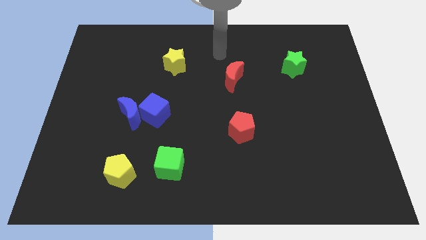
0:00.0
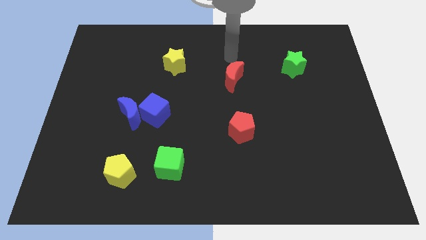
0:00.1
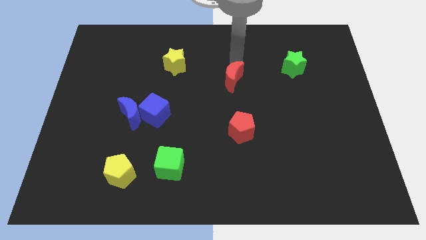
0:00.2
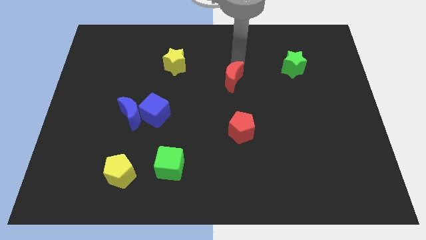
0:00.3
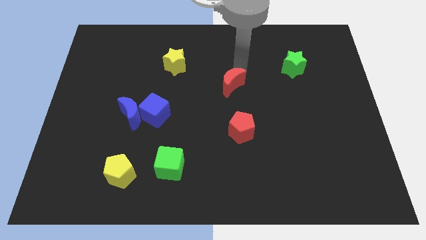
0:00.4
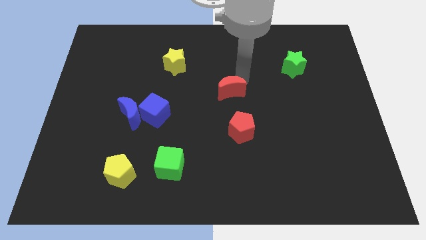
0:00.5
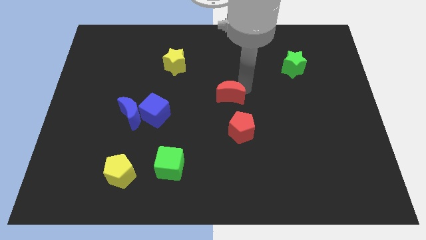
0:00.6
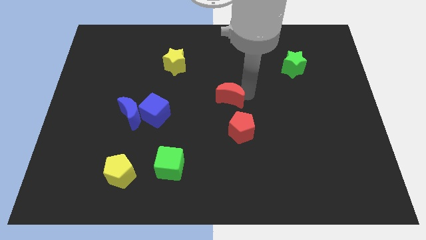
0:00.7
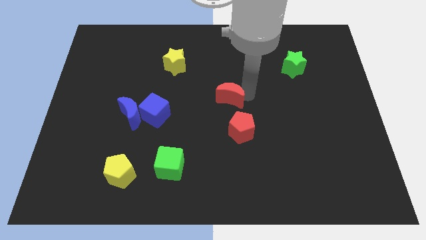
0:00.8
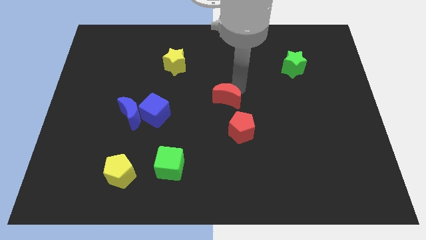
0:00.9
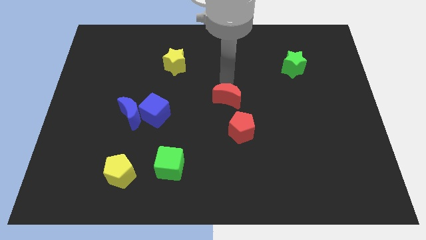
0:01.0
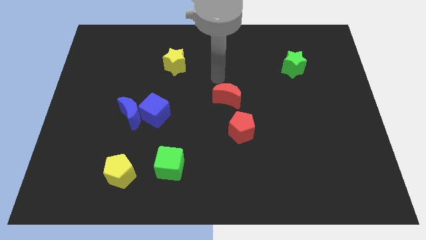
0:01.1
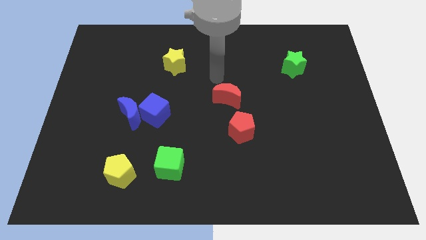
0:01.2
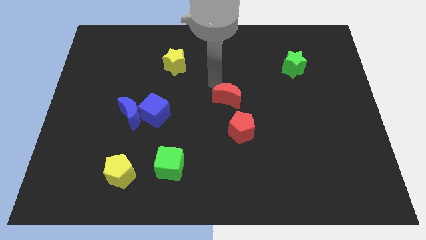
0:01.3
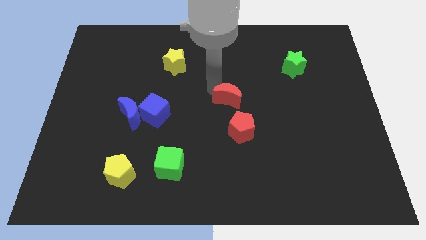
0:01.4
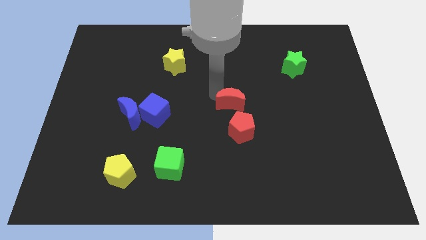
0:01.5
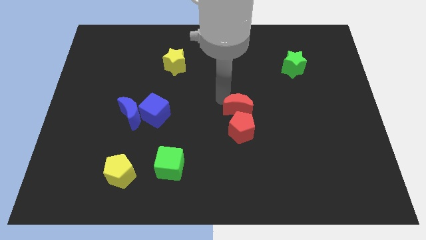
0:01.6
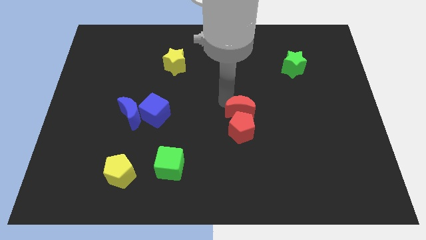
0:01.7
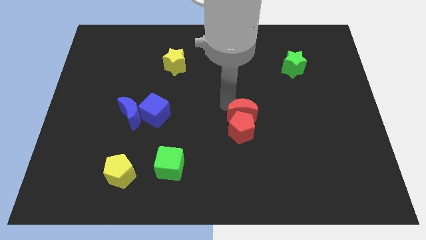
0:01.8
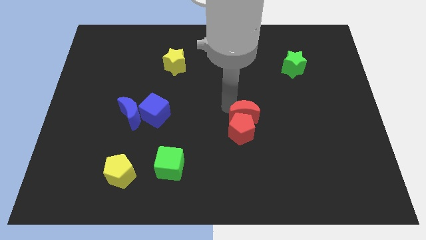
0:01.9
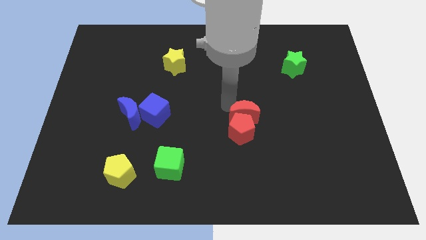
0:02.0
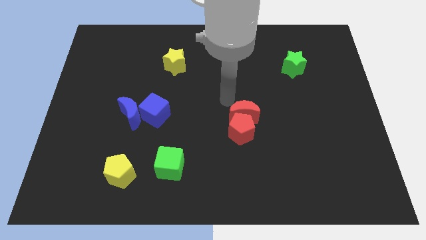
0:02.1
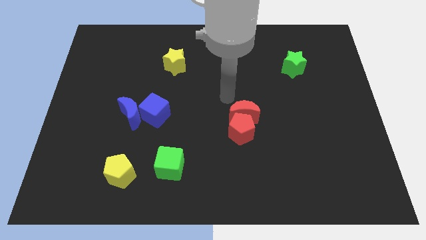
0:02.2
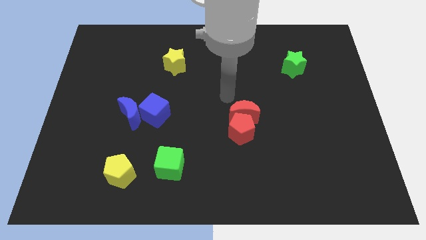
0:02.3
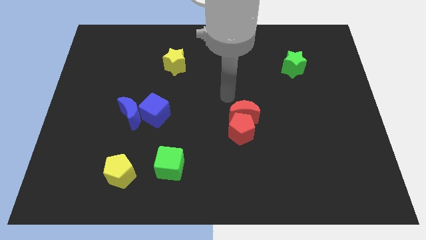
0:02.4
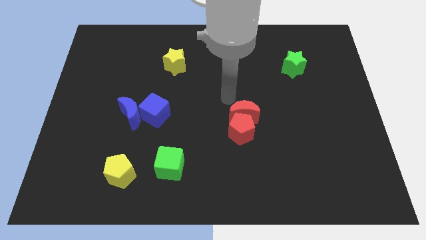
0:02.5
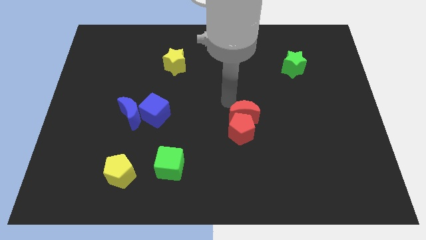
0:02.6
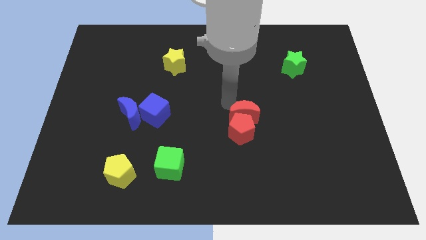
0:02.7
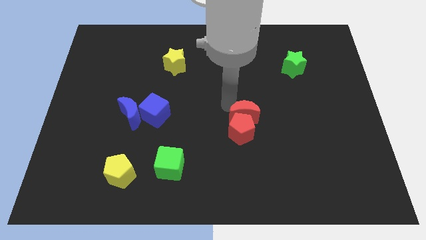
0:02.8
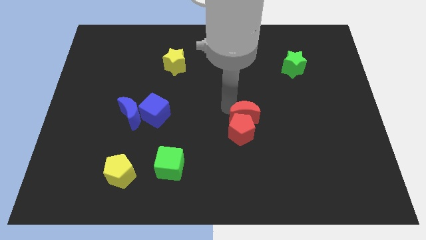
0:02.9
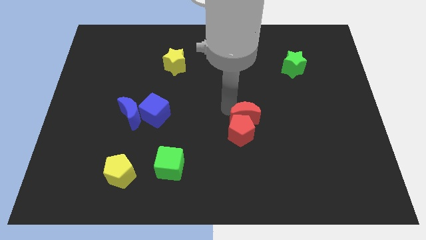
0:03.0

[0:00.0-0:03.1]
push the red moon into the red pentagon

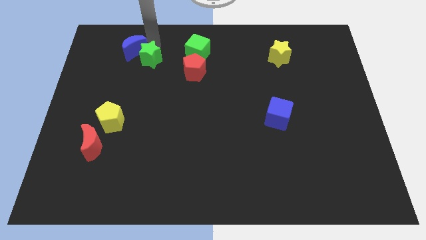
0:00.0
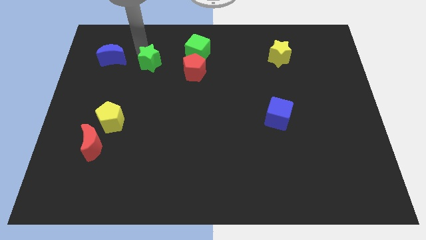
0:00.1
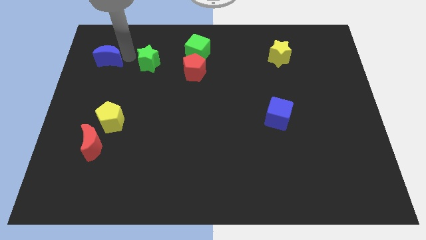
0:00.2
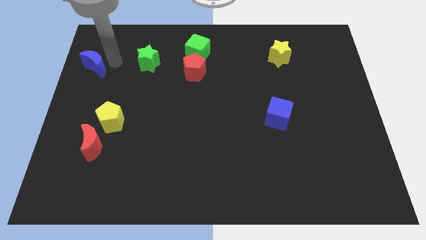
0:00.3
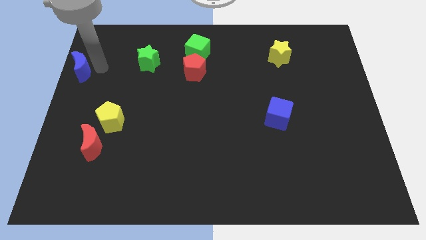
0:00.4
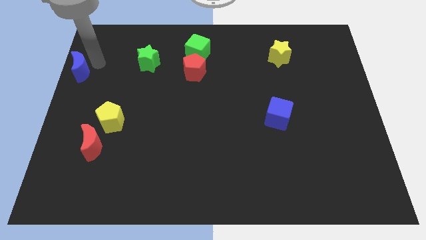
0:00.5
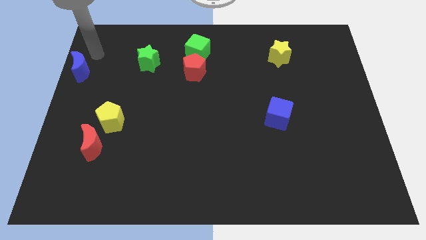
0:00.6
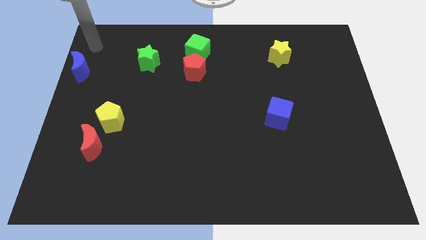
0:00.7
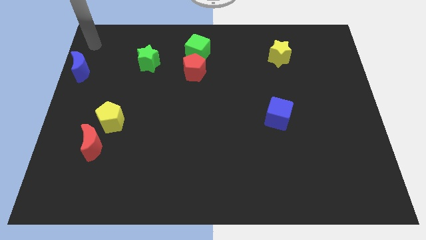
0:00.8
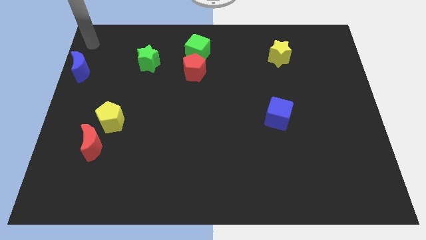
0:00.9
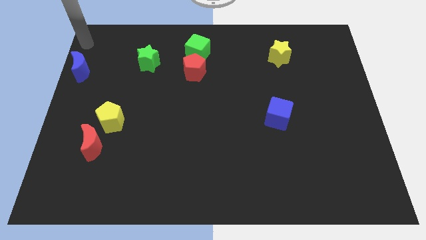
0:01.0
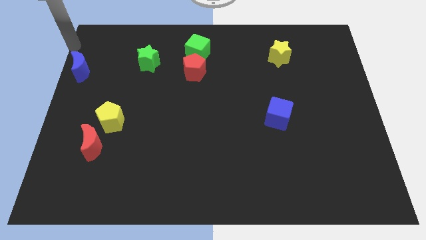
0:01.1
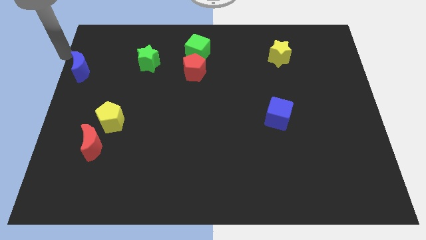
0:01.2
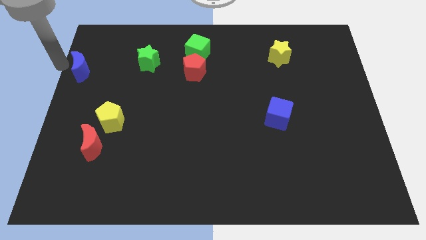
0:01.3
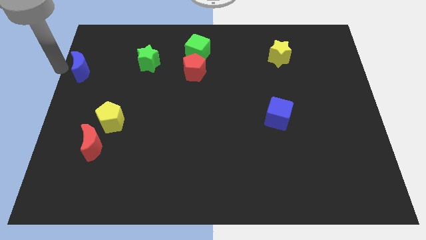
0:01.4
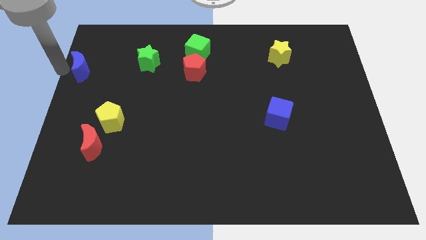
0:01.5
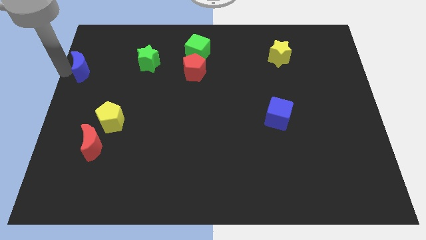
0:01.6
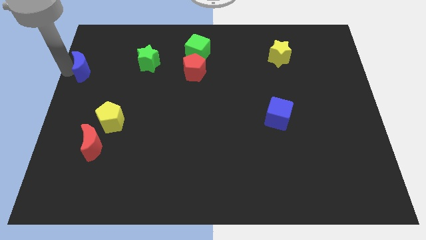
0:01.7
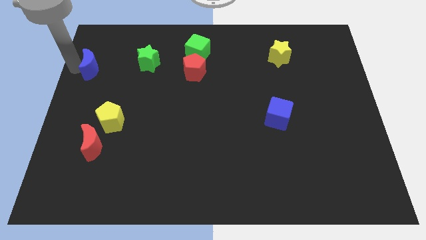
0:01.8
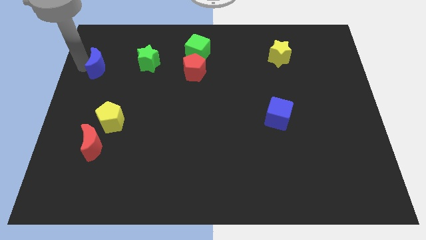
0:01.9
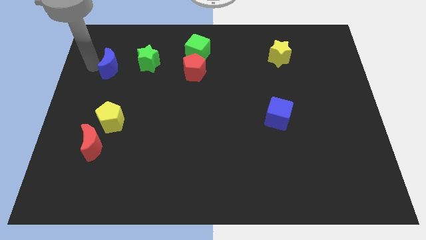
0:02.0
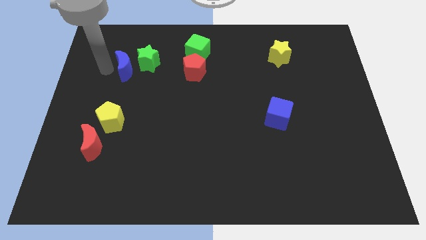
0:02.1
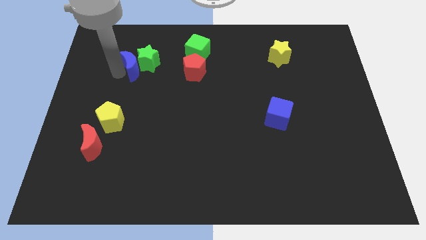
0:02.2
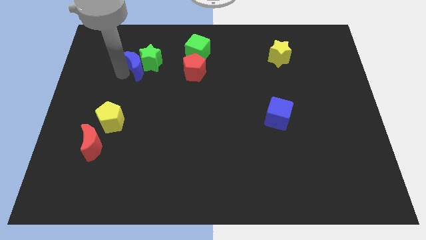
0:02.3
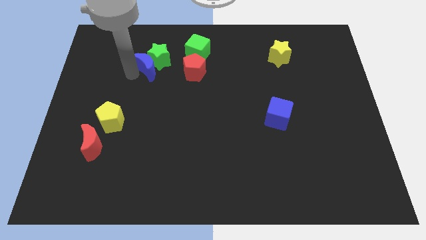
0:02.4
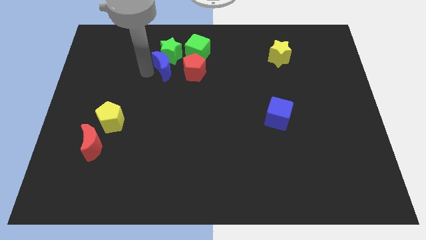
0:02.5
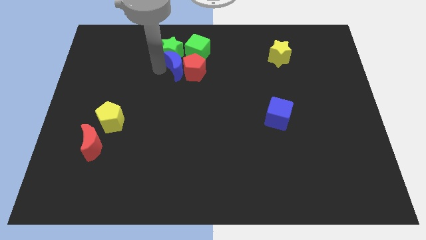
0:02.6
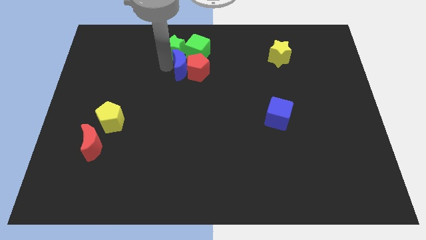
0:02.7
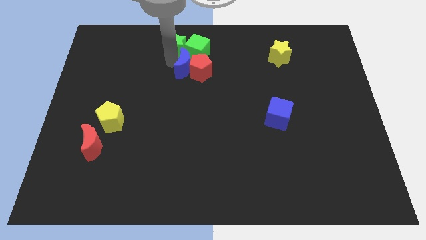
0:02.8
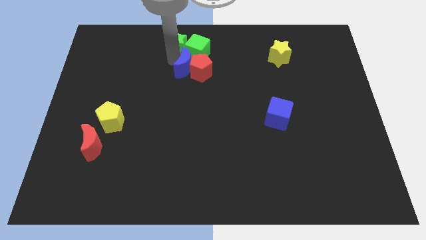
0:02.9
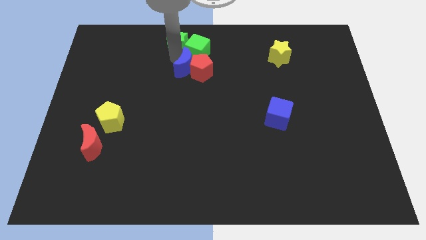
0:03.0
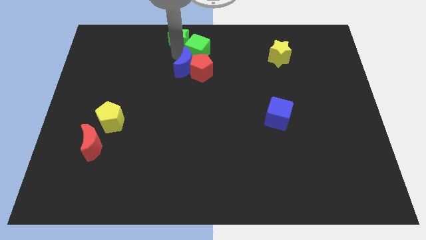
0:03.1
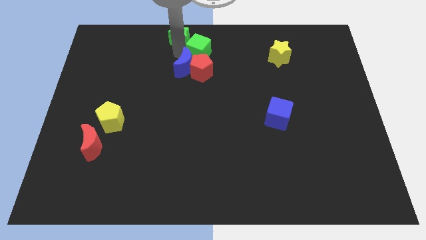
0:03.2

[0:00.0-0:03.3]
add the blue moon to the group of both green blocks and red pentagon

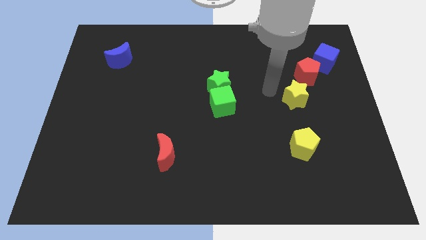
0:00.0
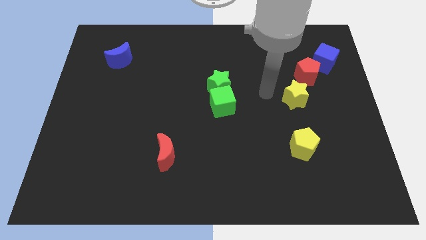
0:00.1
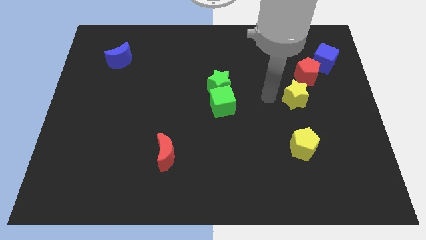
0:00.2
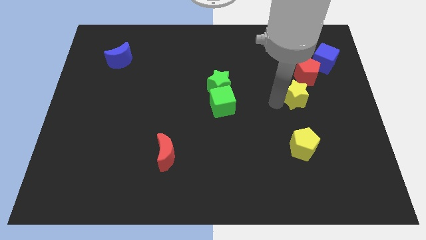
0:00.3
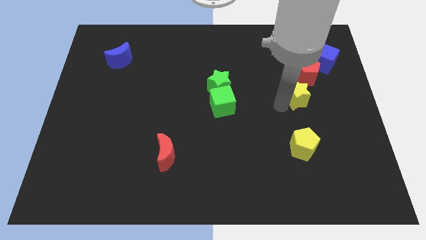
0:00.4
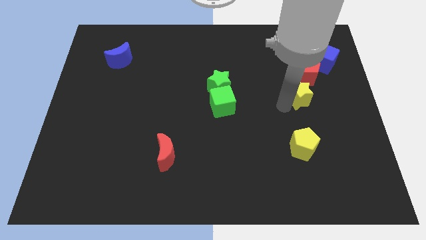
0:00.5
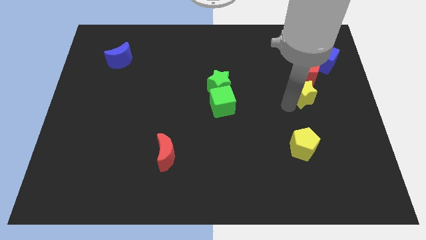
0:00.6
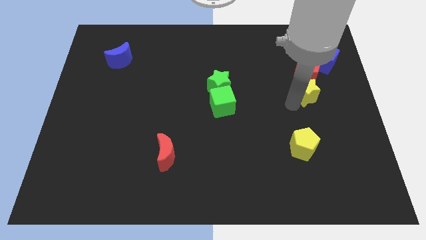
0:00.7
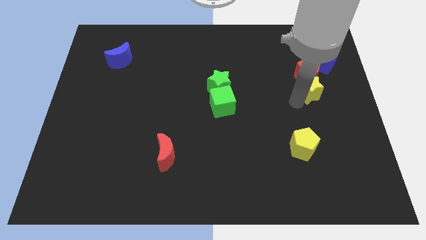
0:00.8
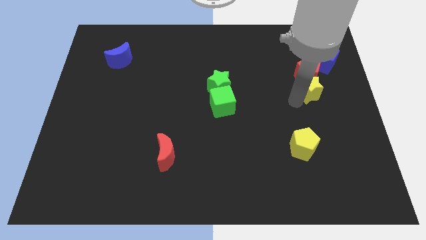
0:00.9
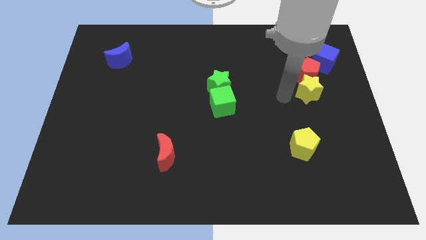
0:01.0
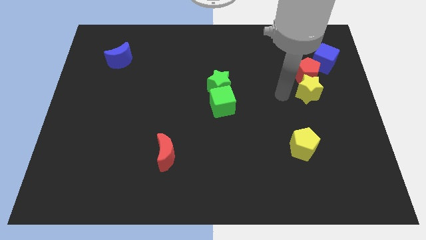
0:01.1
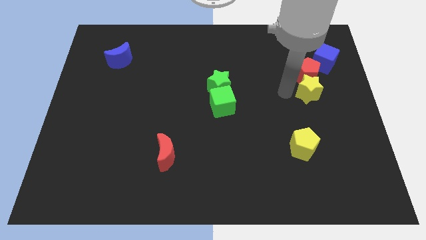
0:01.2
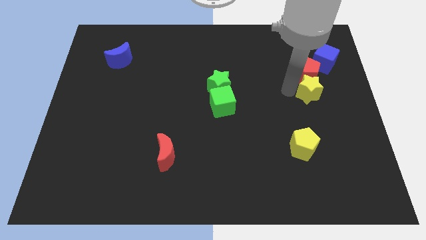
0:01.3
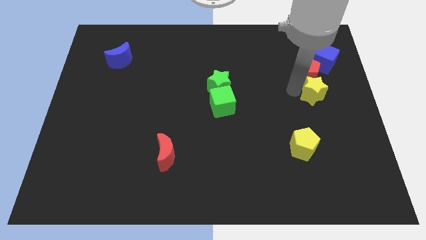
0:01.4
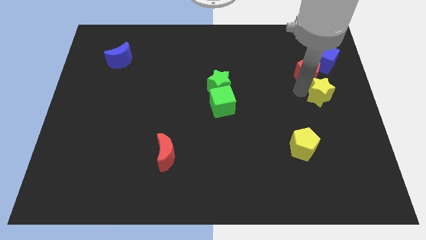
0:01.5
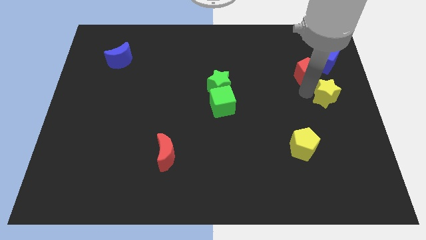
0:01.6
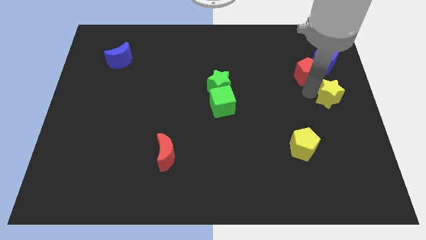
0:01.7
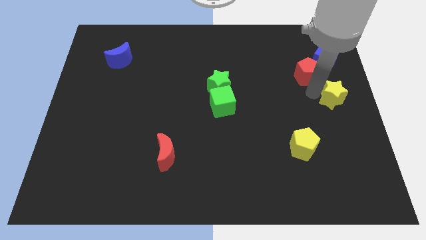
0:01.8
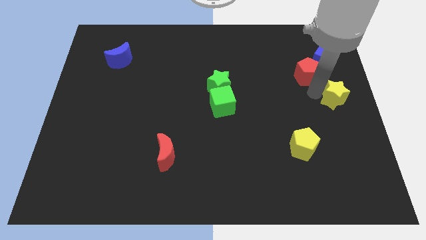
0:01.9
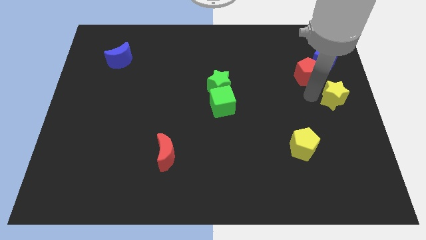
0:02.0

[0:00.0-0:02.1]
move the yellow star at the bottom right of the red pentagon

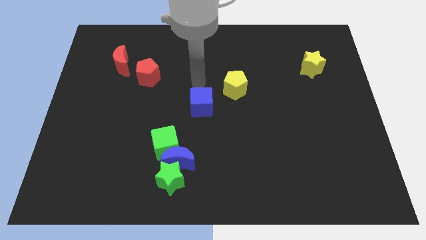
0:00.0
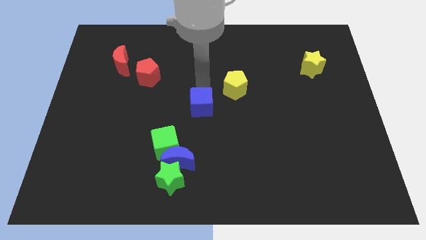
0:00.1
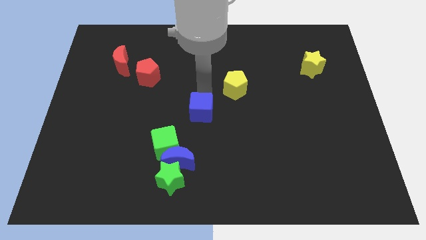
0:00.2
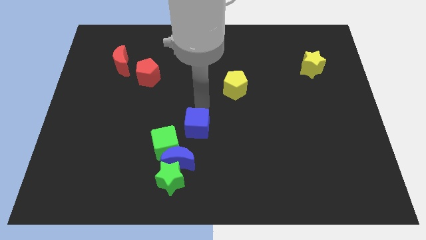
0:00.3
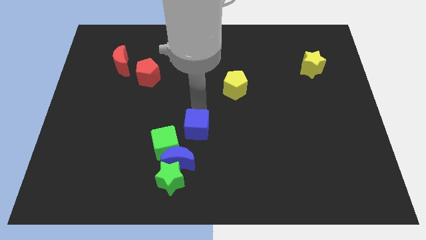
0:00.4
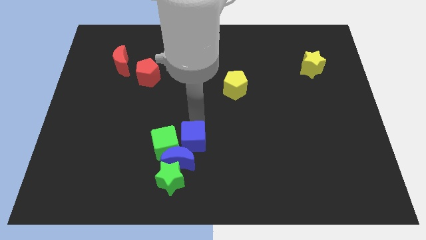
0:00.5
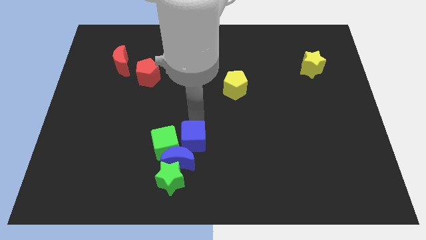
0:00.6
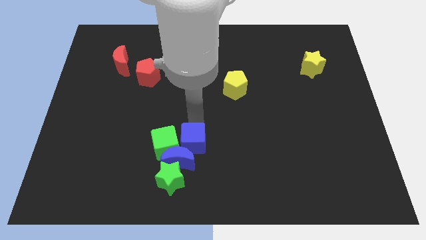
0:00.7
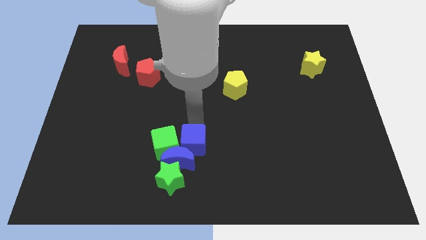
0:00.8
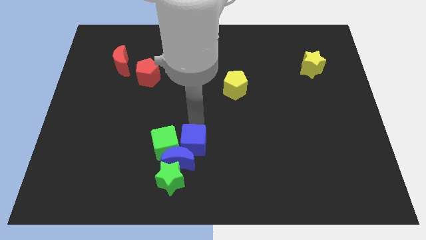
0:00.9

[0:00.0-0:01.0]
move the blue cube to the right of the green cube
